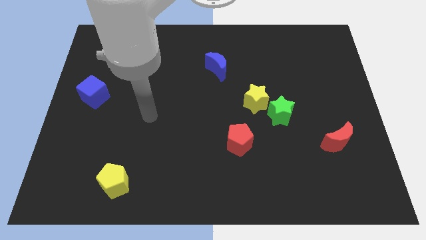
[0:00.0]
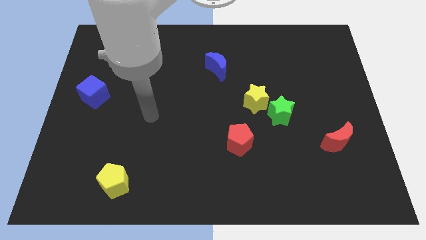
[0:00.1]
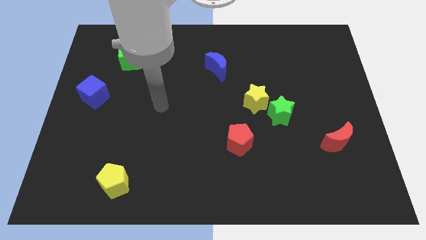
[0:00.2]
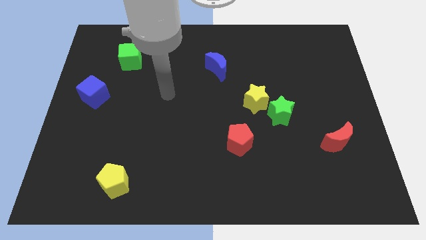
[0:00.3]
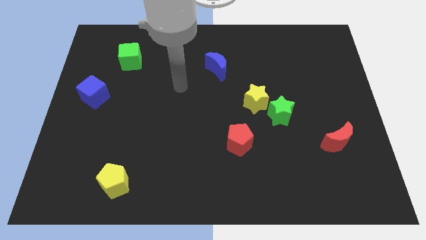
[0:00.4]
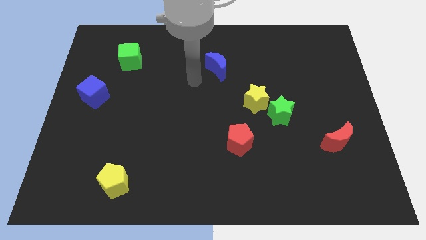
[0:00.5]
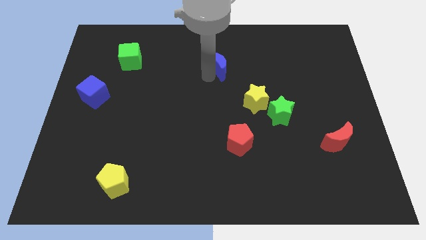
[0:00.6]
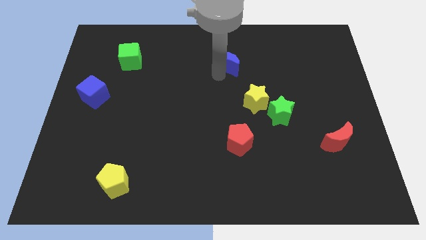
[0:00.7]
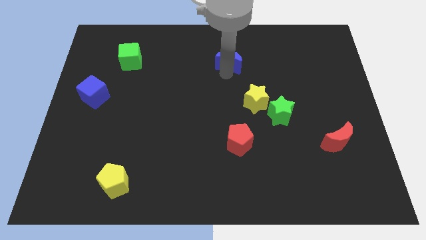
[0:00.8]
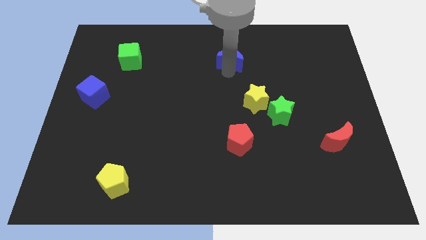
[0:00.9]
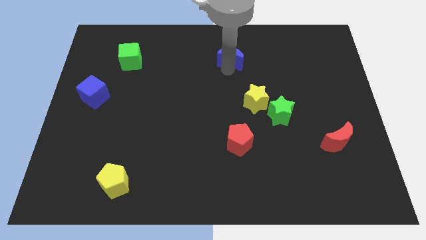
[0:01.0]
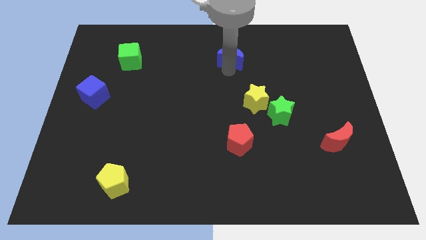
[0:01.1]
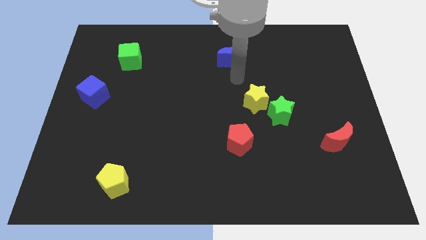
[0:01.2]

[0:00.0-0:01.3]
move the blue crescent towards the top side of the table

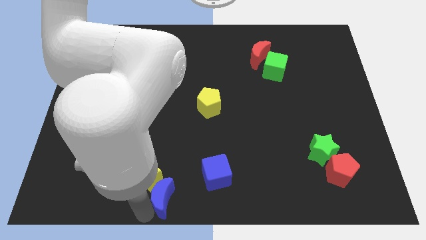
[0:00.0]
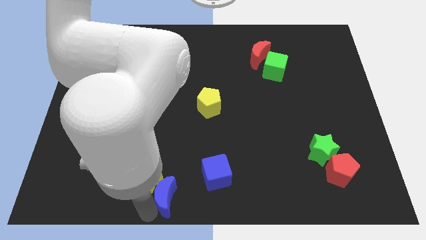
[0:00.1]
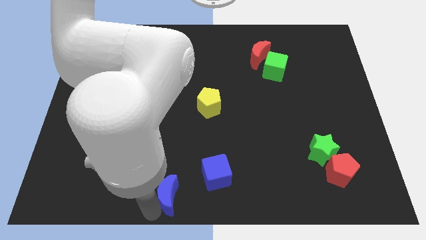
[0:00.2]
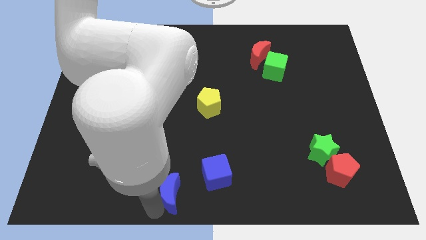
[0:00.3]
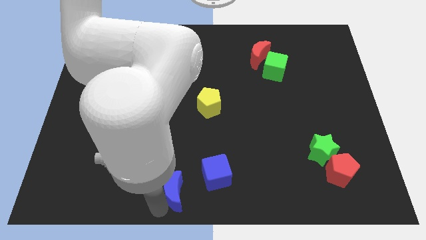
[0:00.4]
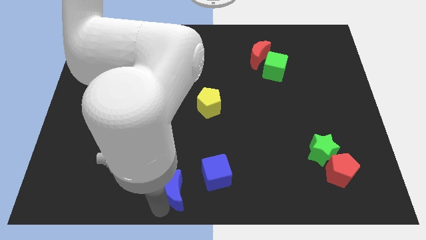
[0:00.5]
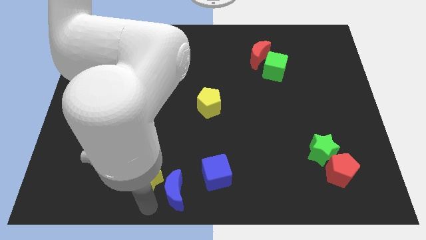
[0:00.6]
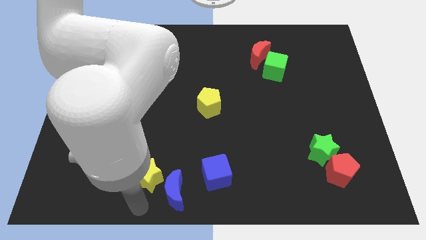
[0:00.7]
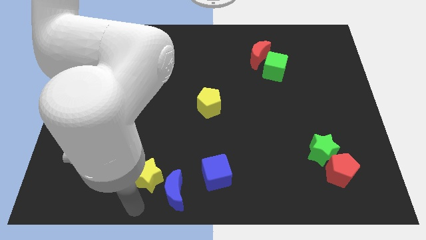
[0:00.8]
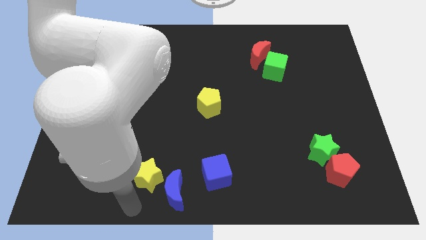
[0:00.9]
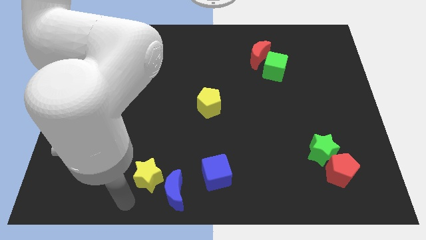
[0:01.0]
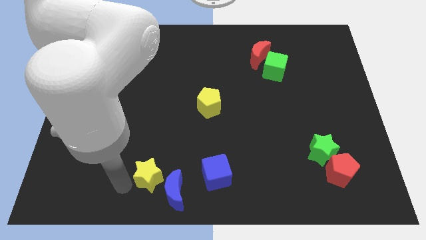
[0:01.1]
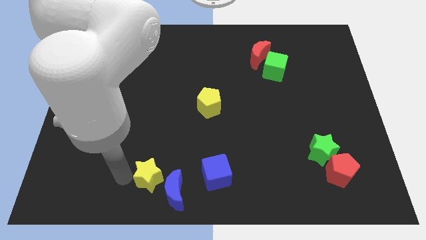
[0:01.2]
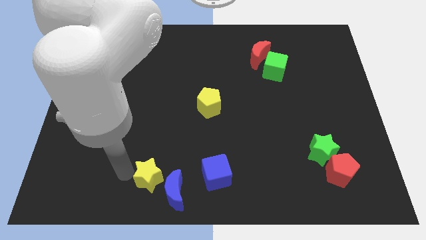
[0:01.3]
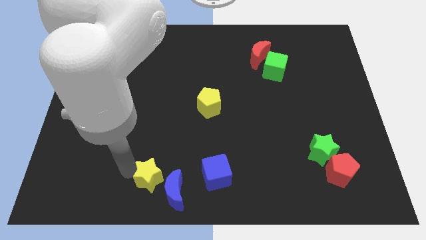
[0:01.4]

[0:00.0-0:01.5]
drag the blue crescent towards the blue cube

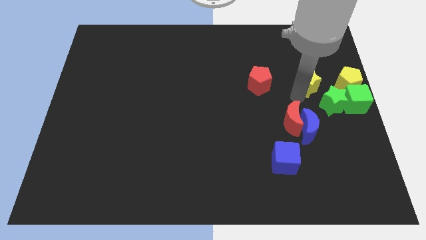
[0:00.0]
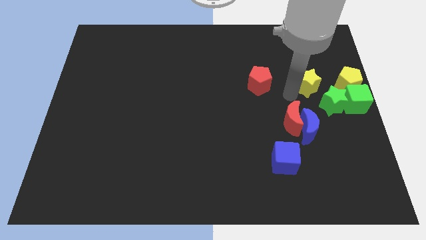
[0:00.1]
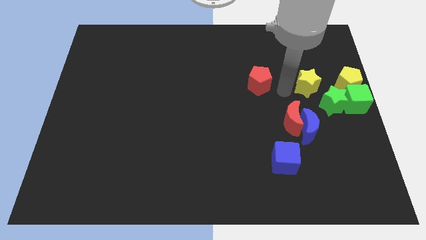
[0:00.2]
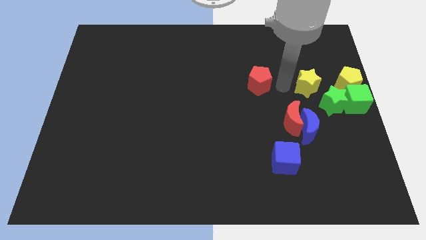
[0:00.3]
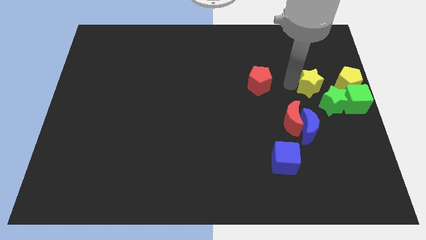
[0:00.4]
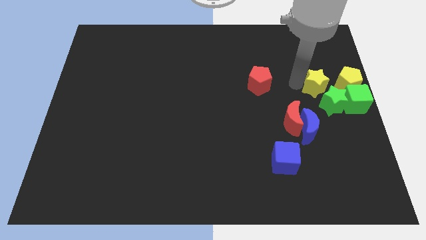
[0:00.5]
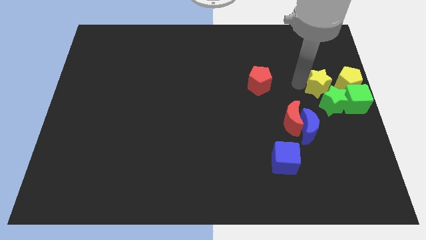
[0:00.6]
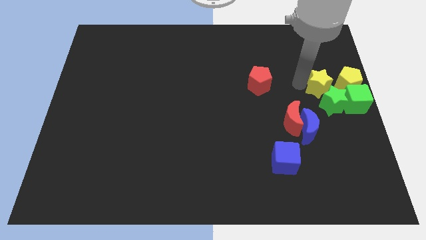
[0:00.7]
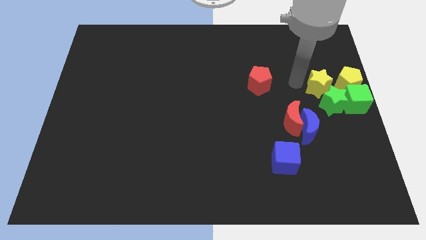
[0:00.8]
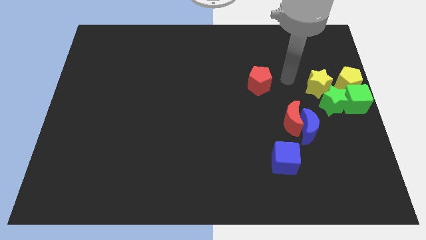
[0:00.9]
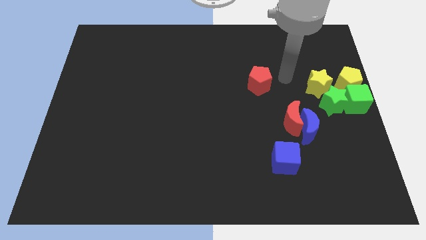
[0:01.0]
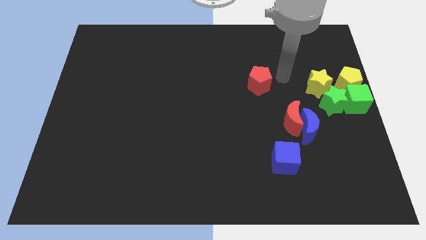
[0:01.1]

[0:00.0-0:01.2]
place the yellow star to the left side of the yellow pentagon

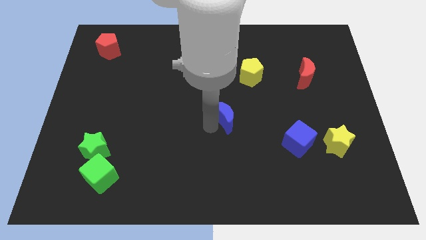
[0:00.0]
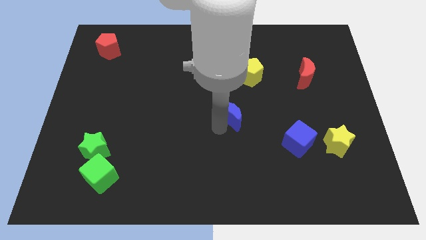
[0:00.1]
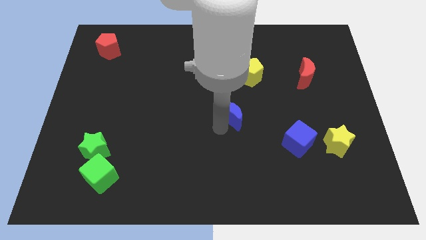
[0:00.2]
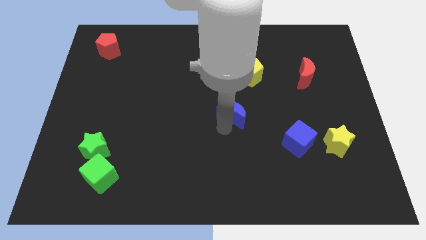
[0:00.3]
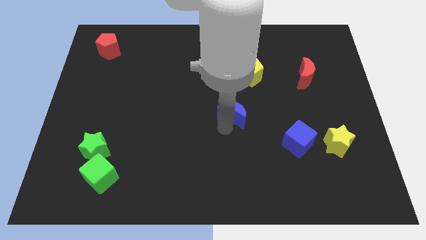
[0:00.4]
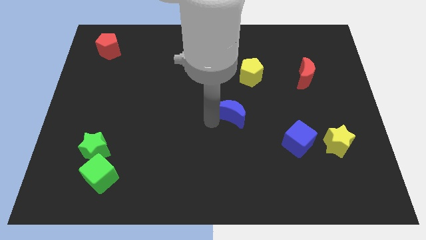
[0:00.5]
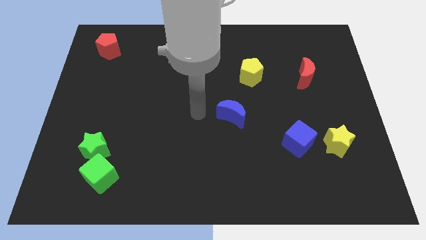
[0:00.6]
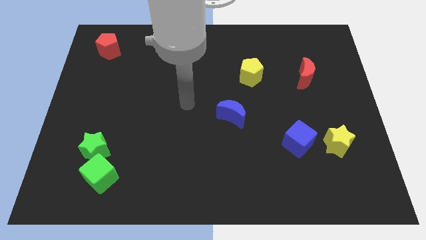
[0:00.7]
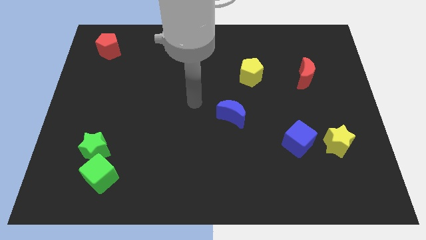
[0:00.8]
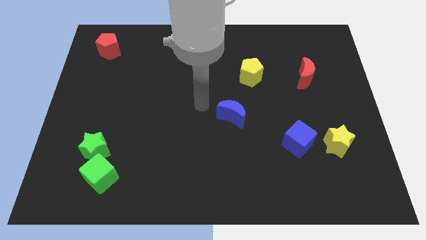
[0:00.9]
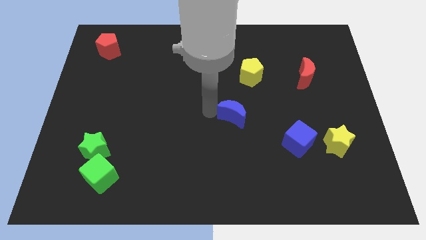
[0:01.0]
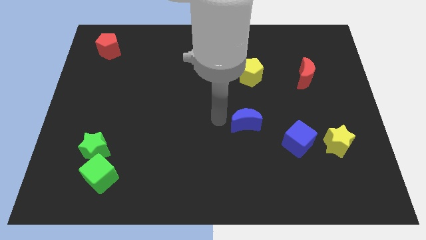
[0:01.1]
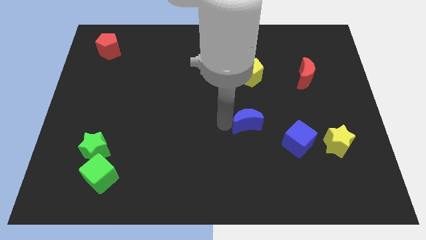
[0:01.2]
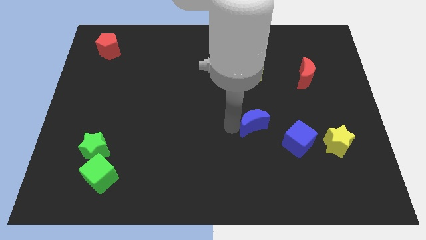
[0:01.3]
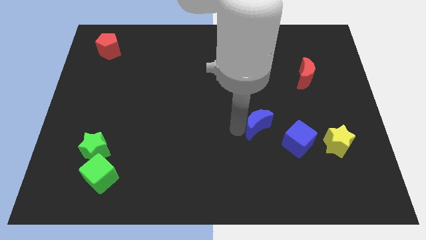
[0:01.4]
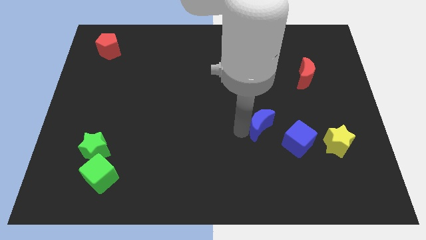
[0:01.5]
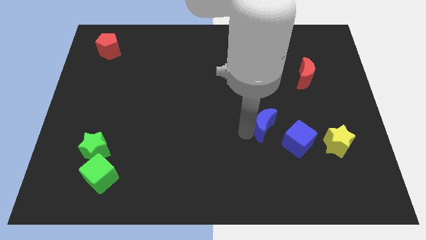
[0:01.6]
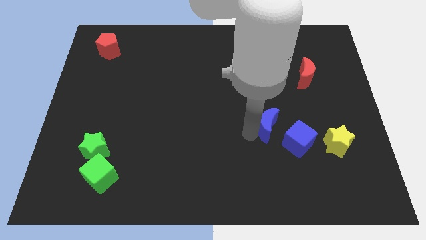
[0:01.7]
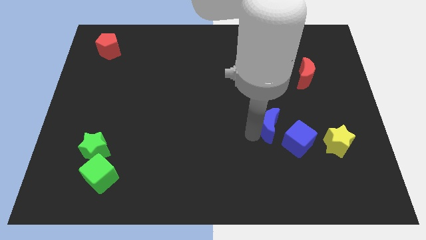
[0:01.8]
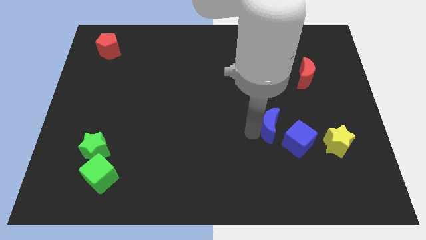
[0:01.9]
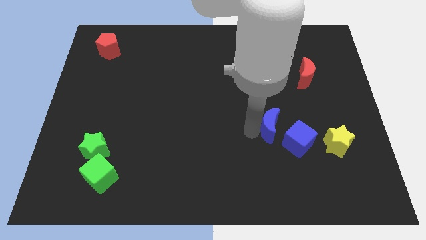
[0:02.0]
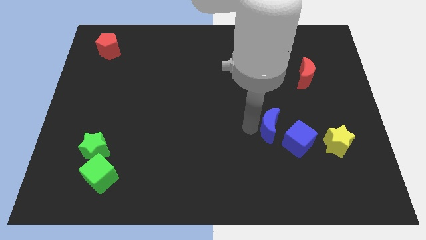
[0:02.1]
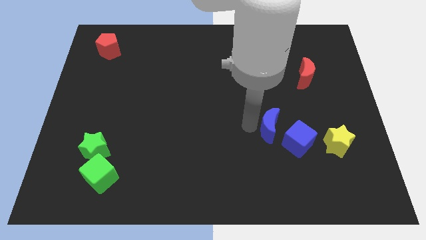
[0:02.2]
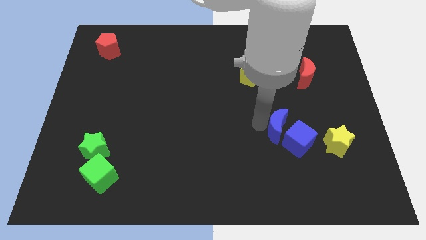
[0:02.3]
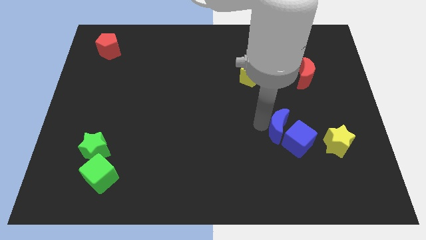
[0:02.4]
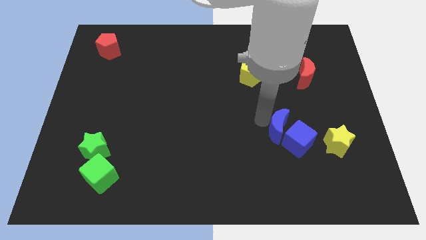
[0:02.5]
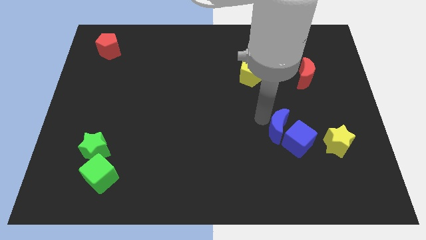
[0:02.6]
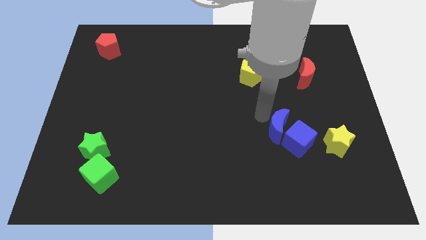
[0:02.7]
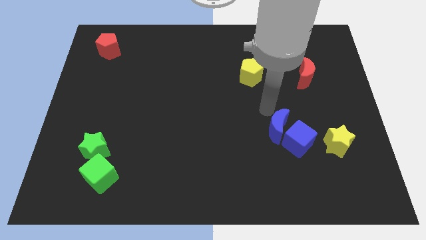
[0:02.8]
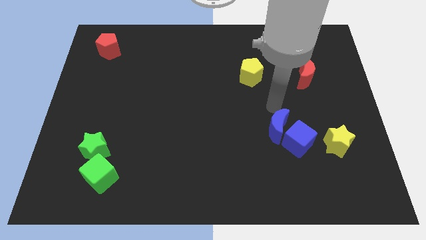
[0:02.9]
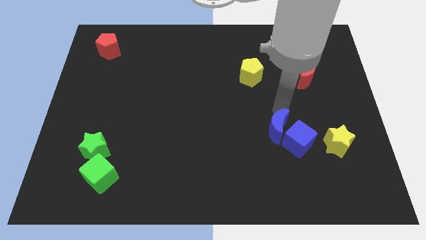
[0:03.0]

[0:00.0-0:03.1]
slide the blue moon diagonally bottom right to the yellow pentagon

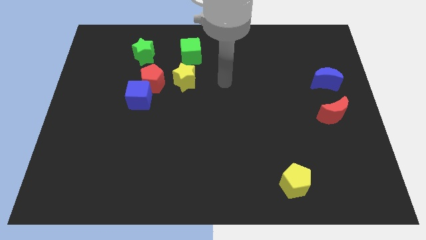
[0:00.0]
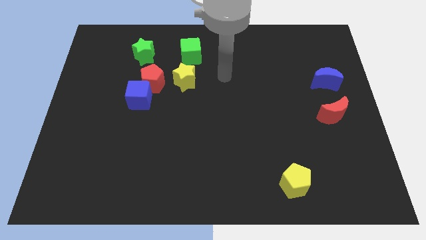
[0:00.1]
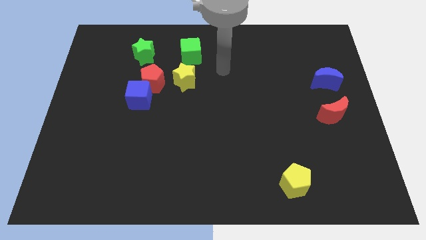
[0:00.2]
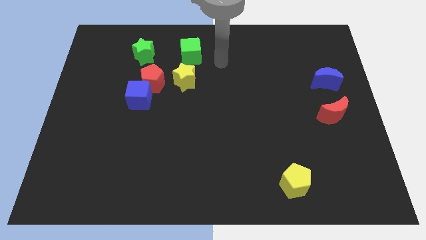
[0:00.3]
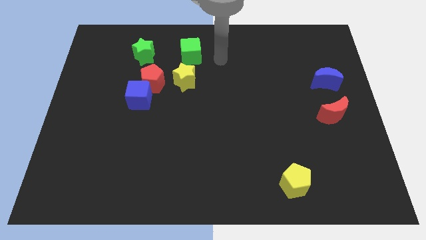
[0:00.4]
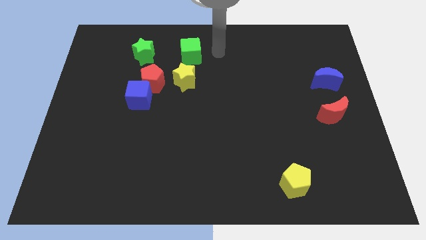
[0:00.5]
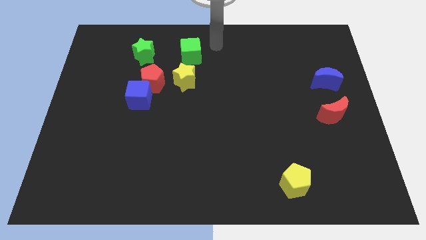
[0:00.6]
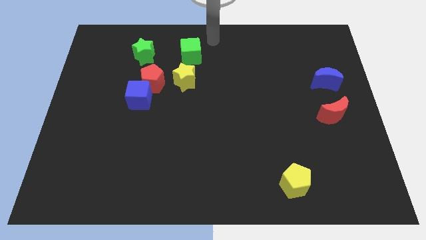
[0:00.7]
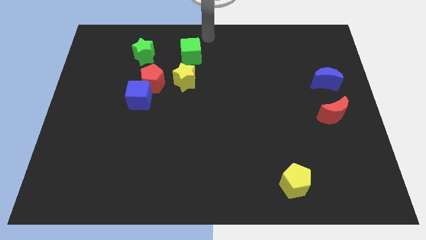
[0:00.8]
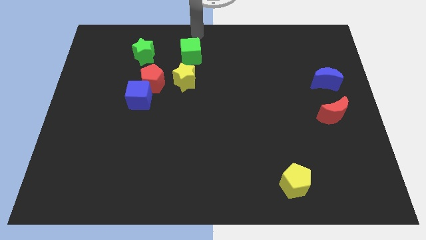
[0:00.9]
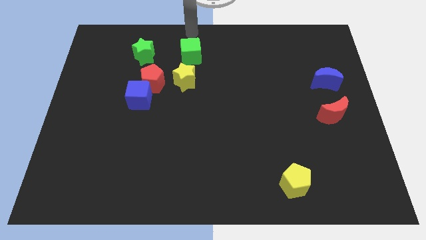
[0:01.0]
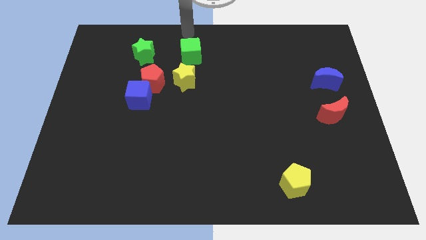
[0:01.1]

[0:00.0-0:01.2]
place your arm at the top of the green cube

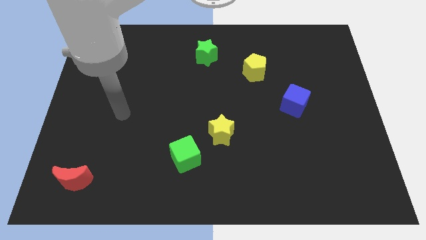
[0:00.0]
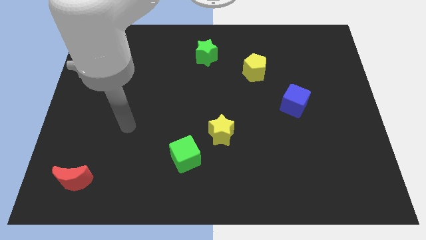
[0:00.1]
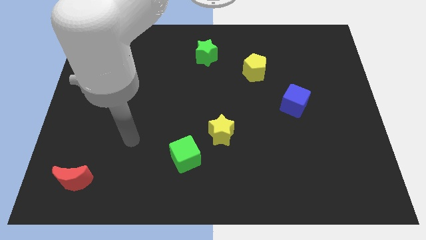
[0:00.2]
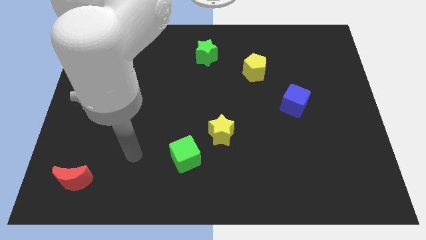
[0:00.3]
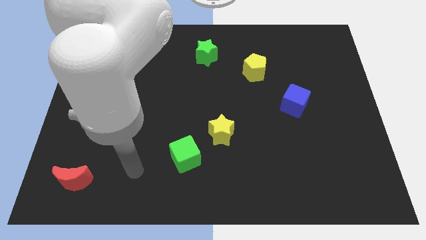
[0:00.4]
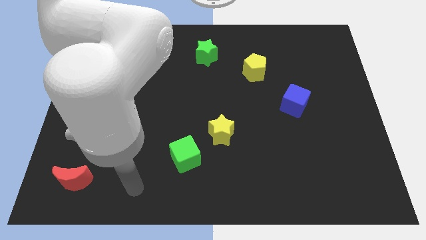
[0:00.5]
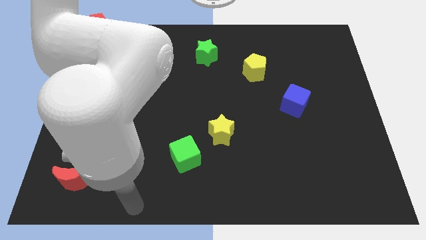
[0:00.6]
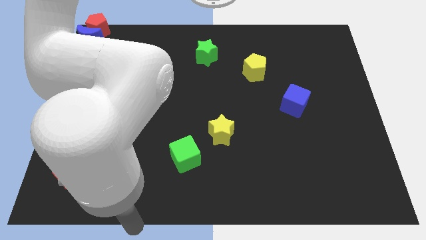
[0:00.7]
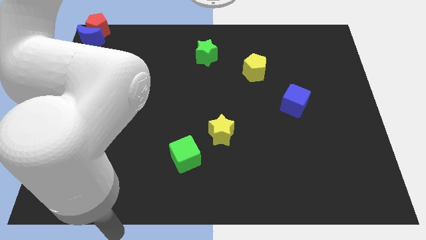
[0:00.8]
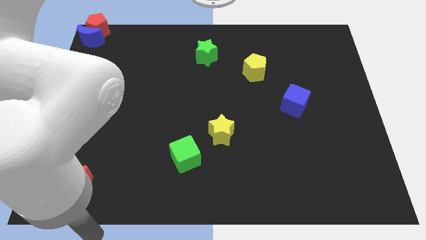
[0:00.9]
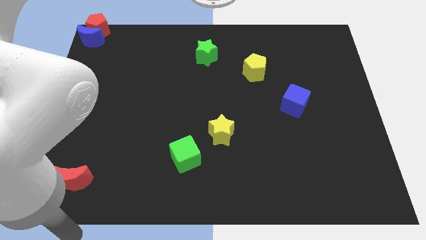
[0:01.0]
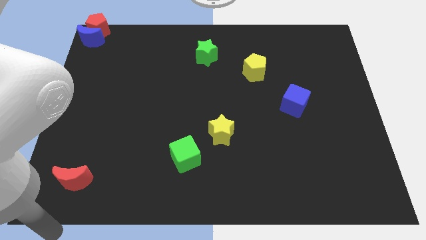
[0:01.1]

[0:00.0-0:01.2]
place your arm at the bottom left of the board
